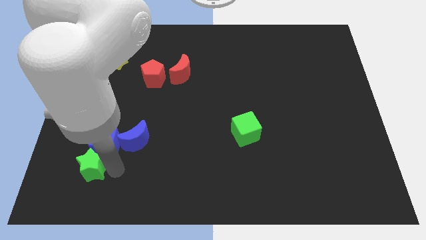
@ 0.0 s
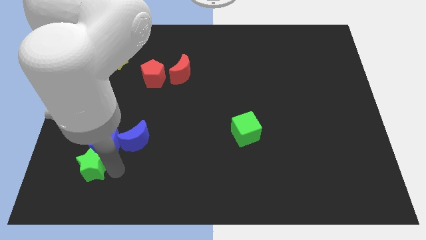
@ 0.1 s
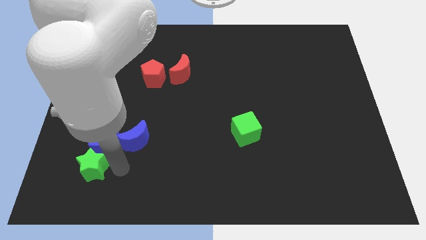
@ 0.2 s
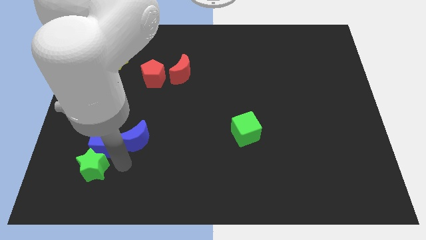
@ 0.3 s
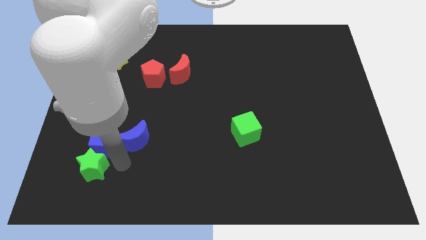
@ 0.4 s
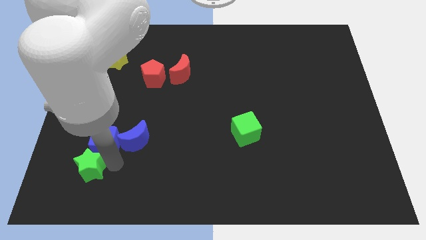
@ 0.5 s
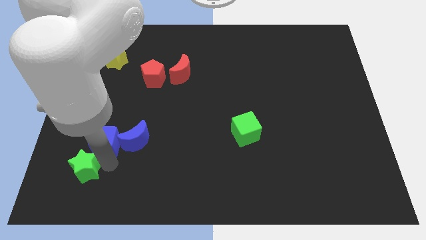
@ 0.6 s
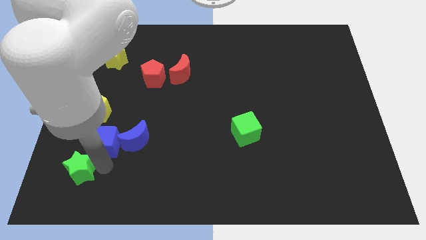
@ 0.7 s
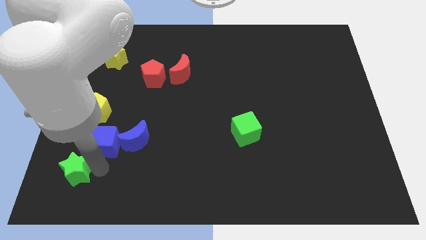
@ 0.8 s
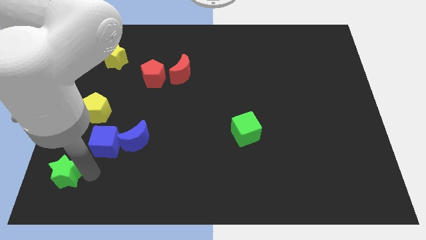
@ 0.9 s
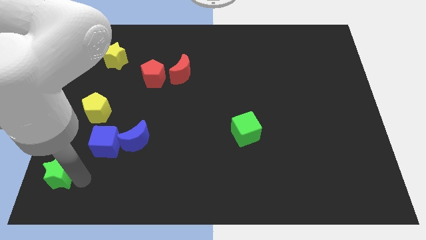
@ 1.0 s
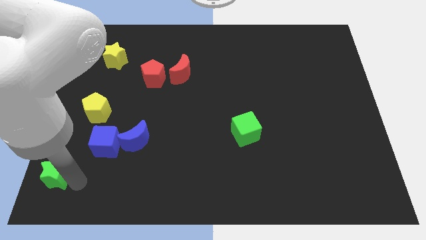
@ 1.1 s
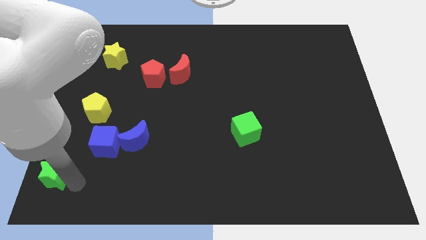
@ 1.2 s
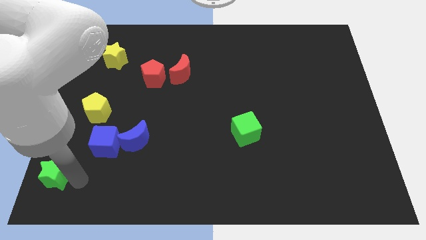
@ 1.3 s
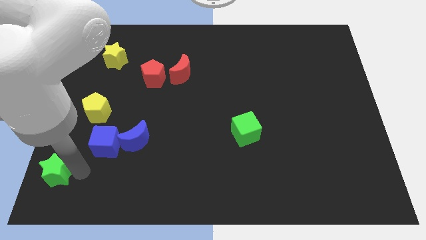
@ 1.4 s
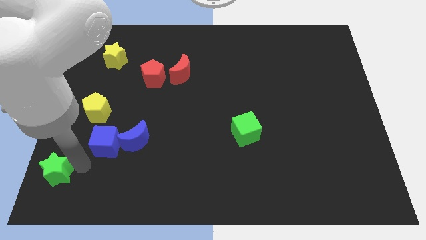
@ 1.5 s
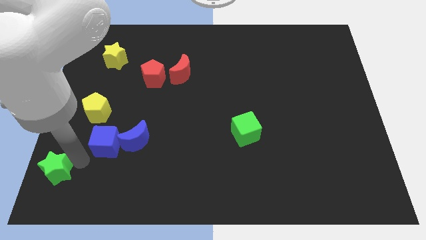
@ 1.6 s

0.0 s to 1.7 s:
push the green star to the left side of the board

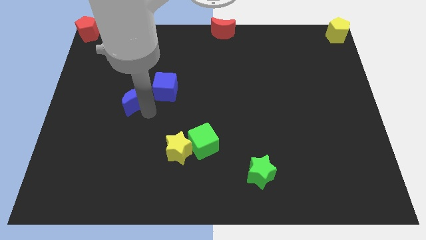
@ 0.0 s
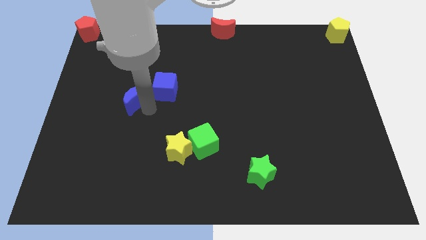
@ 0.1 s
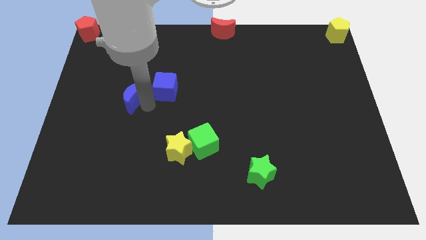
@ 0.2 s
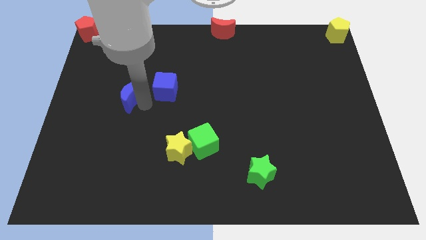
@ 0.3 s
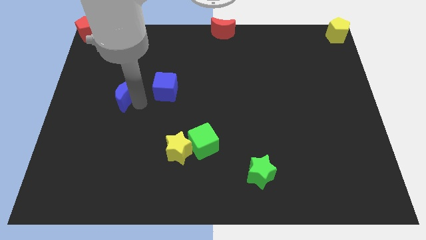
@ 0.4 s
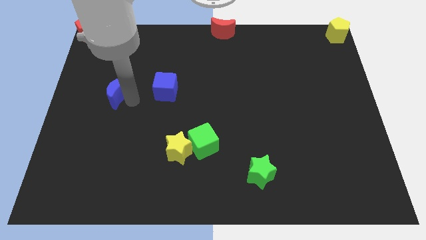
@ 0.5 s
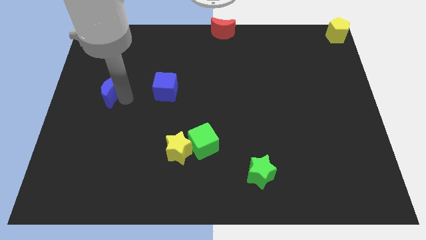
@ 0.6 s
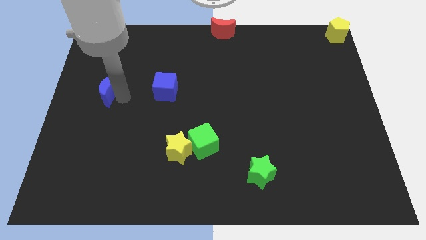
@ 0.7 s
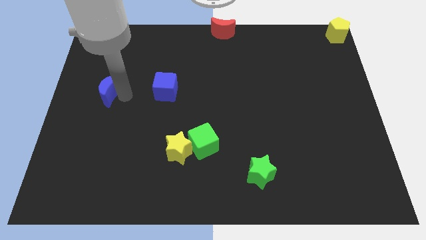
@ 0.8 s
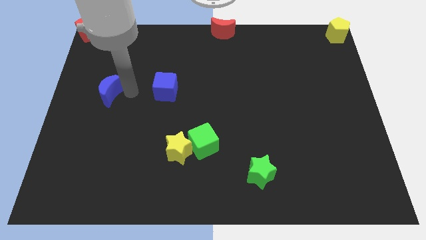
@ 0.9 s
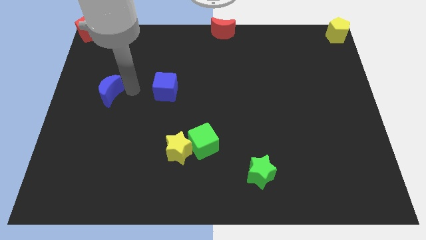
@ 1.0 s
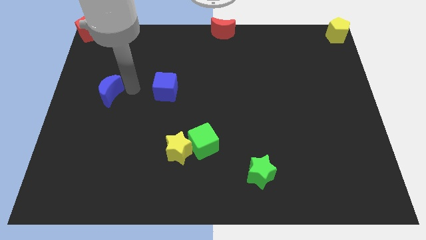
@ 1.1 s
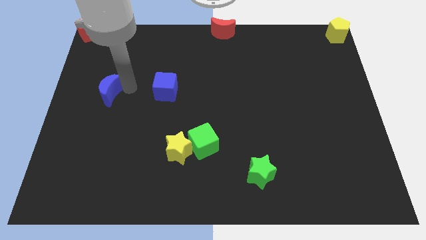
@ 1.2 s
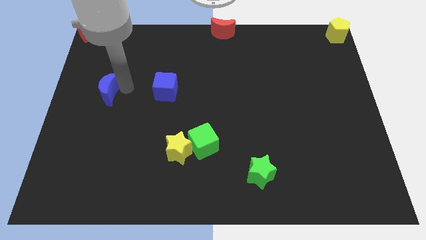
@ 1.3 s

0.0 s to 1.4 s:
push the blue crescent parallel to the left of the blue cube

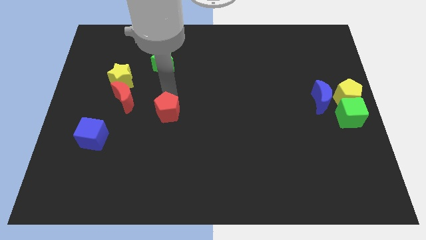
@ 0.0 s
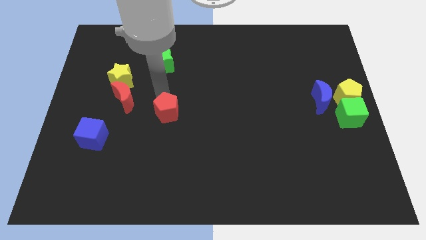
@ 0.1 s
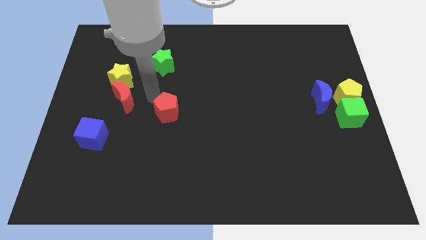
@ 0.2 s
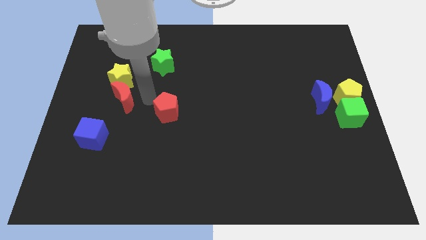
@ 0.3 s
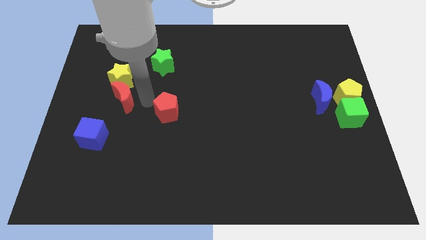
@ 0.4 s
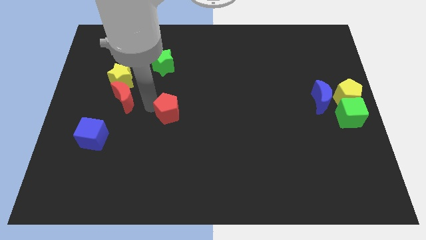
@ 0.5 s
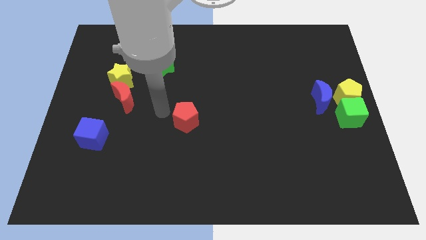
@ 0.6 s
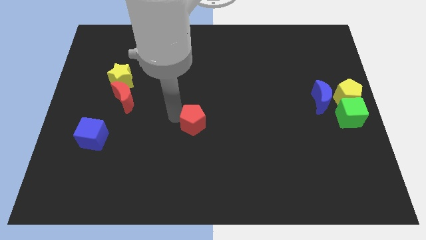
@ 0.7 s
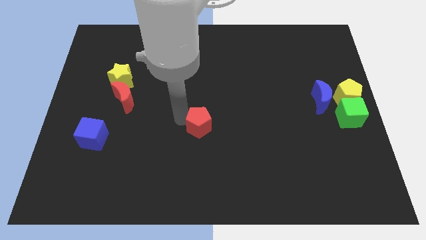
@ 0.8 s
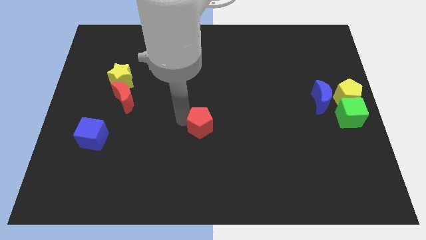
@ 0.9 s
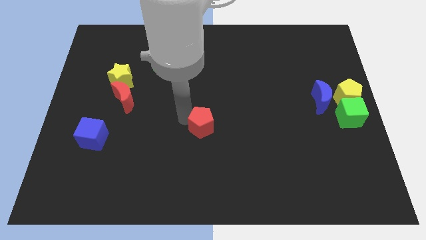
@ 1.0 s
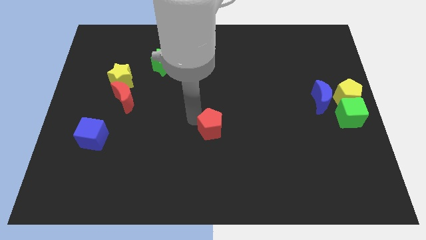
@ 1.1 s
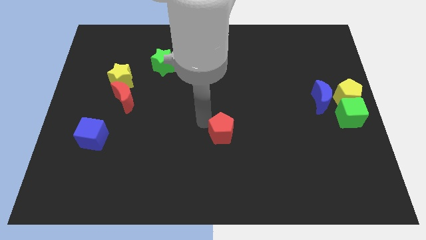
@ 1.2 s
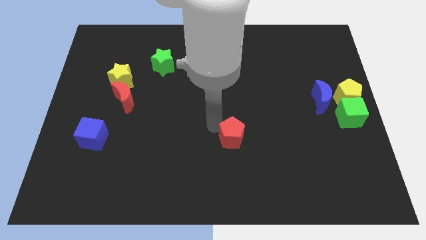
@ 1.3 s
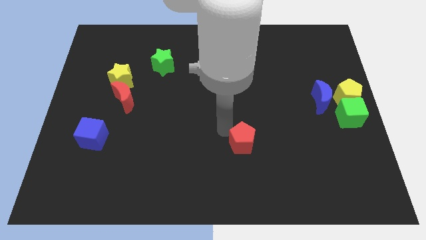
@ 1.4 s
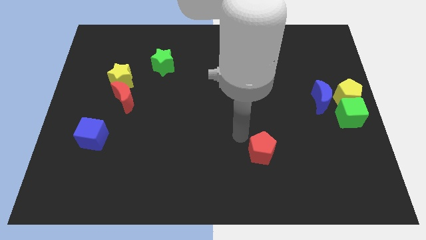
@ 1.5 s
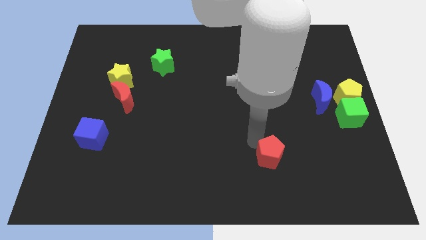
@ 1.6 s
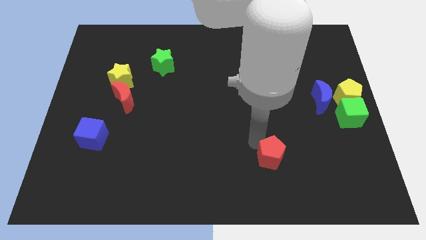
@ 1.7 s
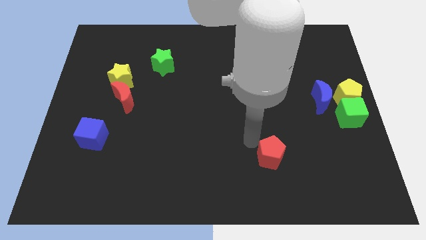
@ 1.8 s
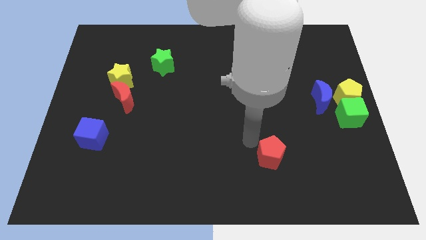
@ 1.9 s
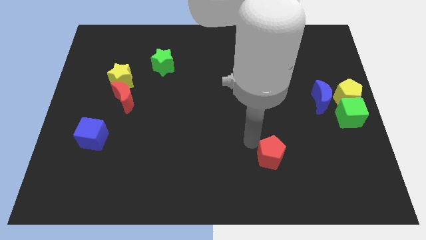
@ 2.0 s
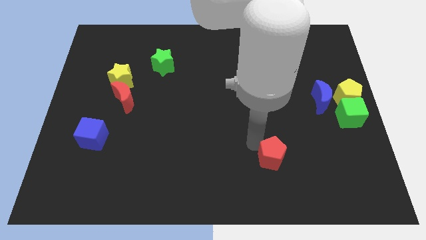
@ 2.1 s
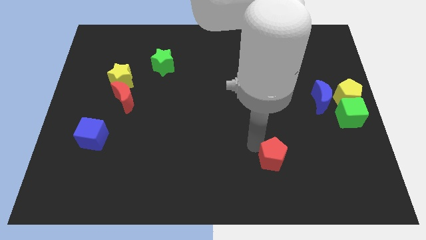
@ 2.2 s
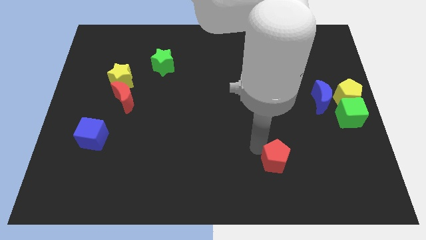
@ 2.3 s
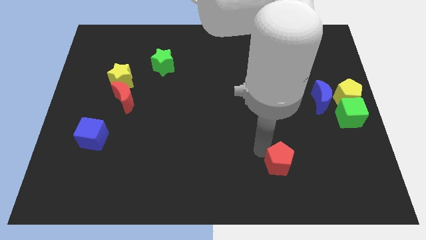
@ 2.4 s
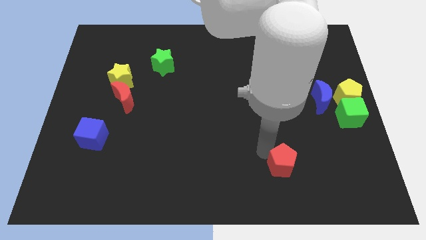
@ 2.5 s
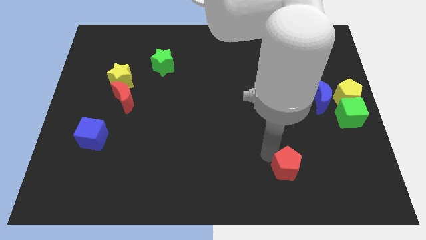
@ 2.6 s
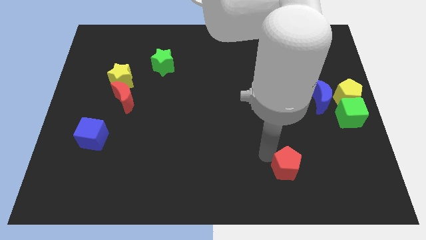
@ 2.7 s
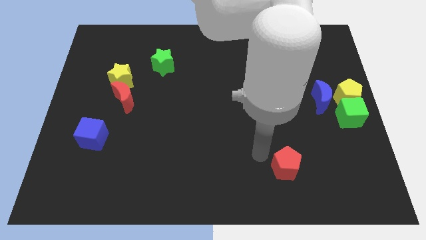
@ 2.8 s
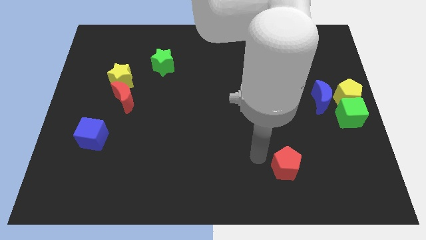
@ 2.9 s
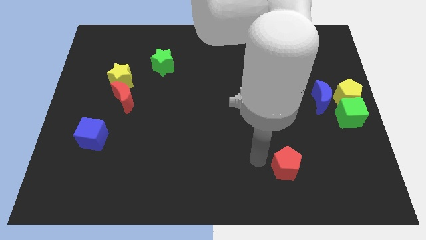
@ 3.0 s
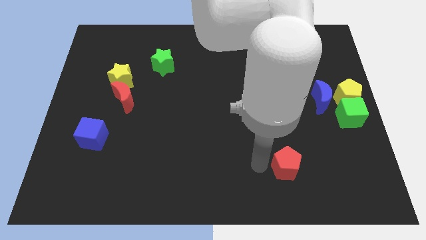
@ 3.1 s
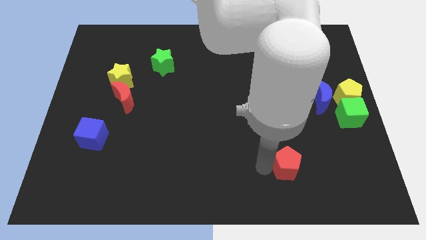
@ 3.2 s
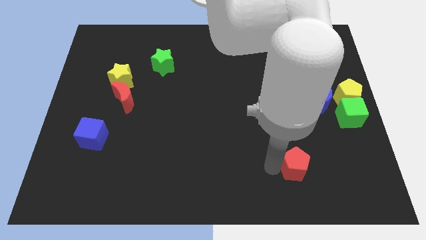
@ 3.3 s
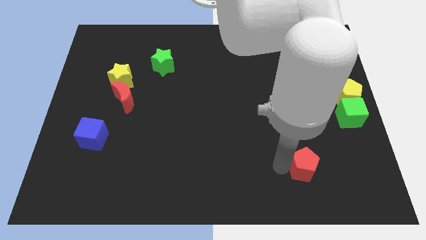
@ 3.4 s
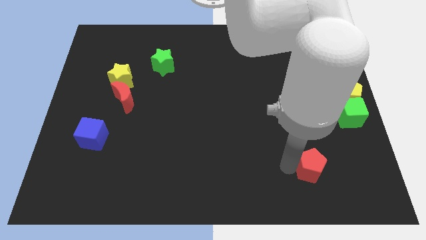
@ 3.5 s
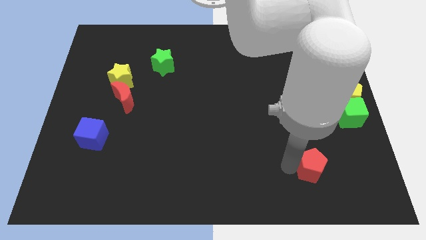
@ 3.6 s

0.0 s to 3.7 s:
move the red pentagon to the right bottom of the board

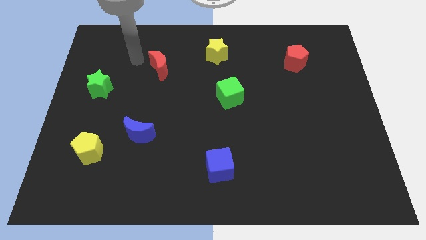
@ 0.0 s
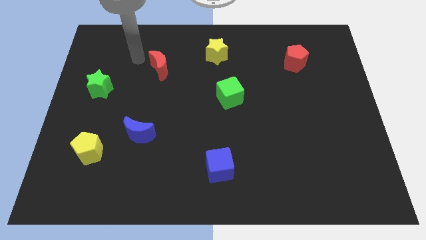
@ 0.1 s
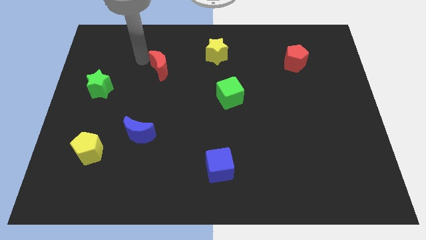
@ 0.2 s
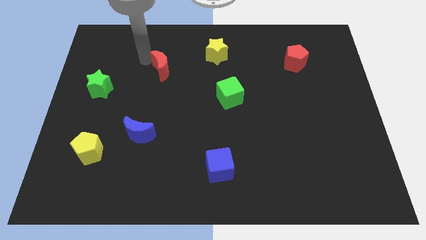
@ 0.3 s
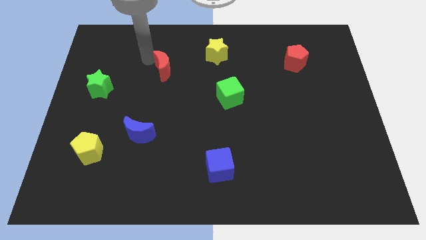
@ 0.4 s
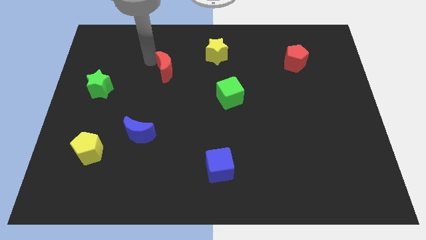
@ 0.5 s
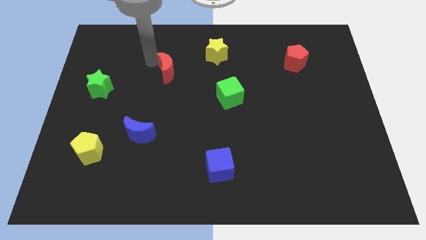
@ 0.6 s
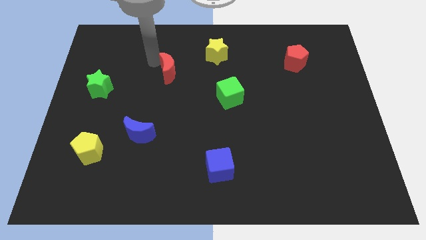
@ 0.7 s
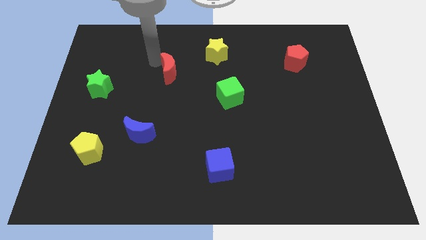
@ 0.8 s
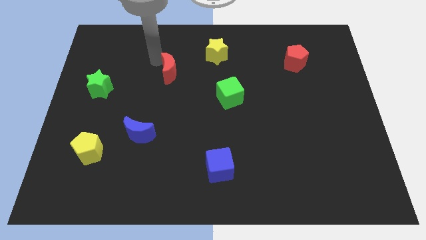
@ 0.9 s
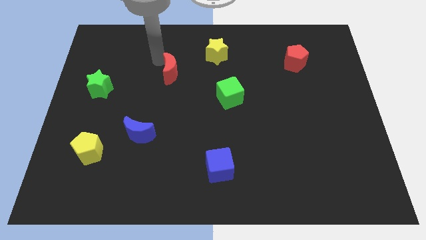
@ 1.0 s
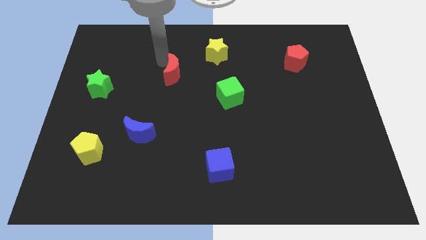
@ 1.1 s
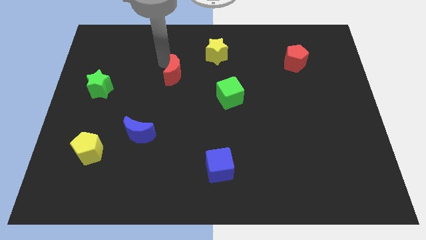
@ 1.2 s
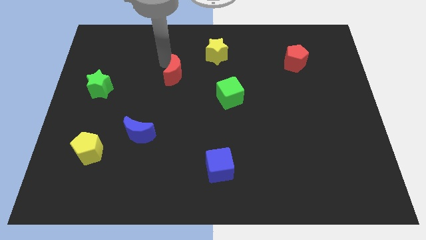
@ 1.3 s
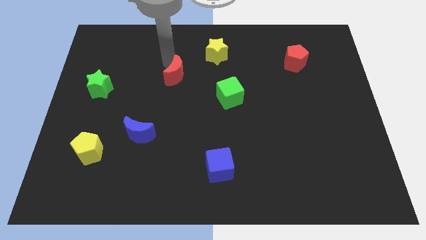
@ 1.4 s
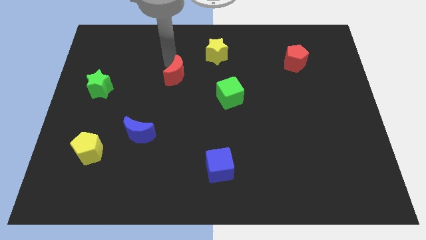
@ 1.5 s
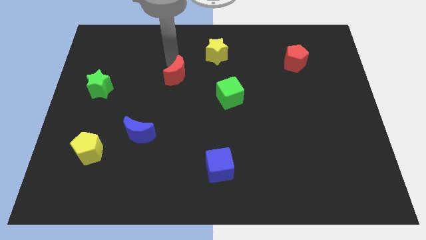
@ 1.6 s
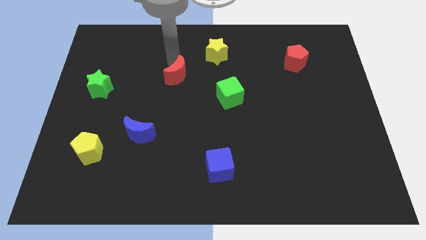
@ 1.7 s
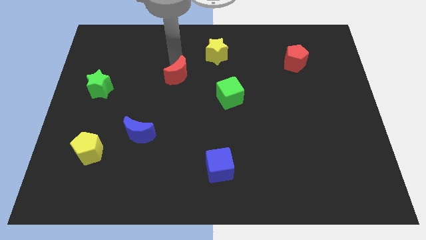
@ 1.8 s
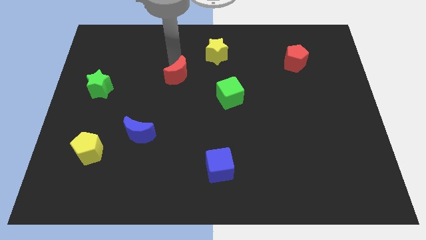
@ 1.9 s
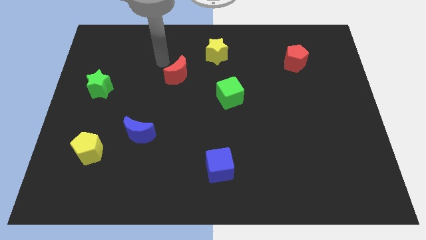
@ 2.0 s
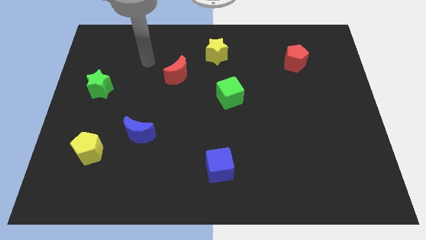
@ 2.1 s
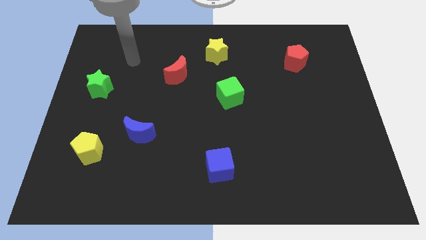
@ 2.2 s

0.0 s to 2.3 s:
push red crescent to the bottom left side of the yellow star
